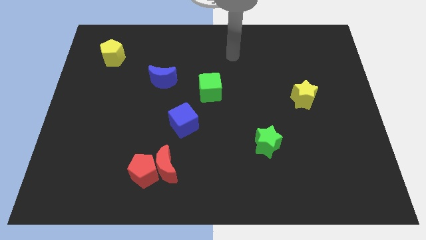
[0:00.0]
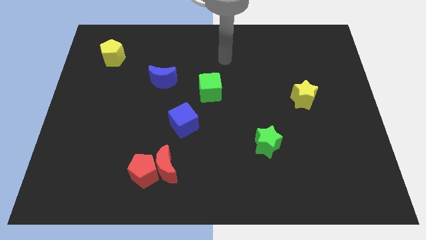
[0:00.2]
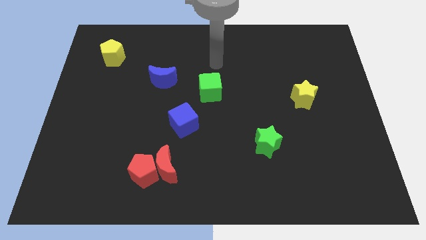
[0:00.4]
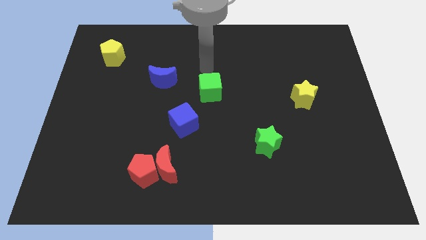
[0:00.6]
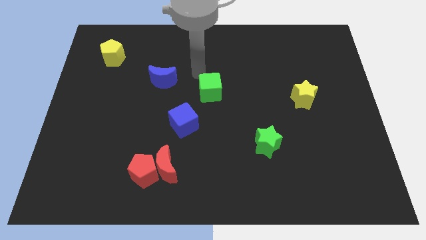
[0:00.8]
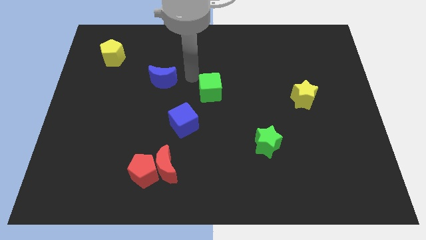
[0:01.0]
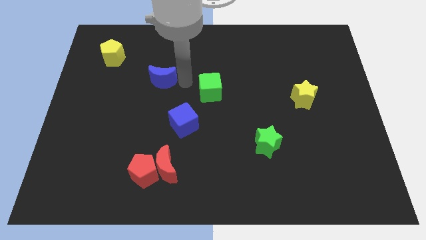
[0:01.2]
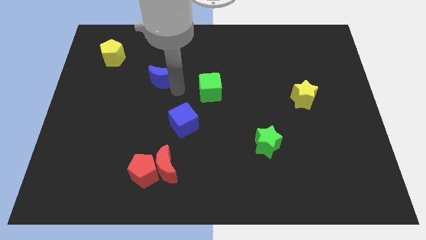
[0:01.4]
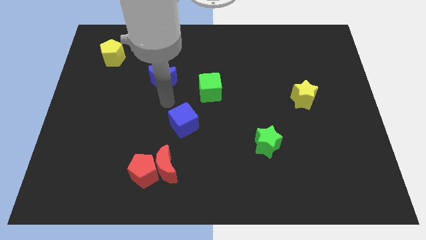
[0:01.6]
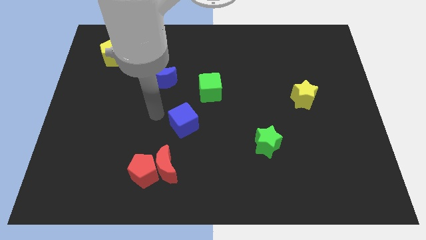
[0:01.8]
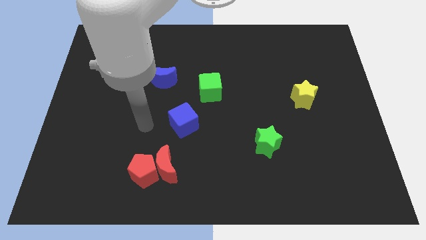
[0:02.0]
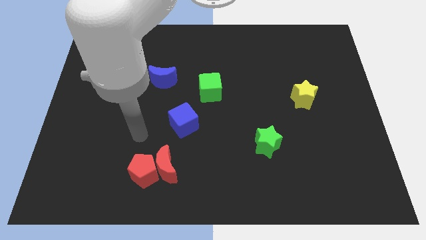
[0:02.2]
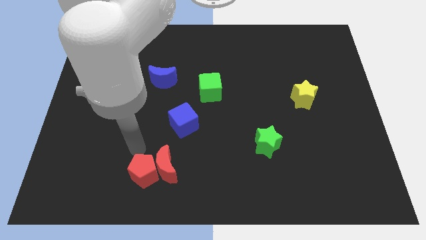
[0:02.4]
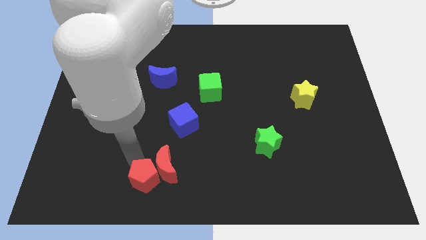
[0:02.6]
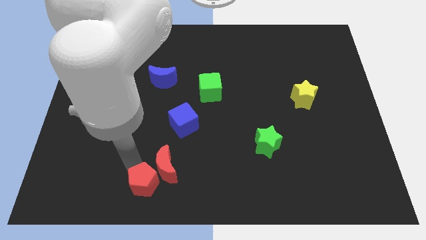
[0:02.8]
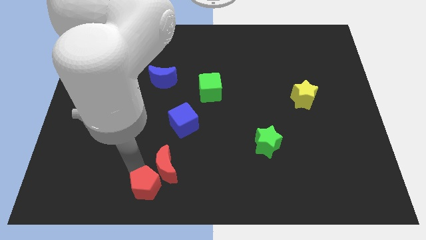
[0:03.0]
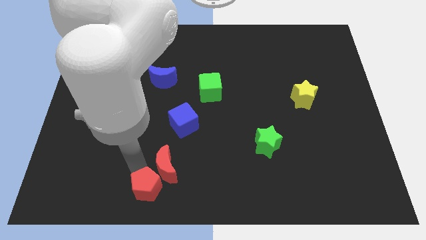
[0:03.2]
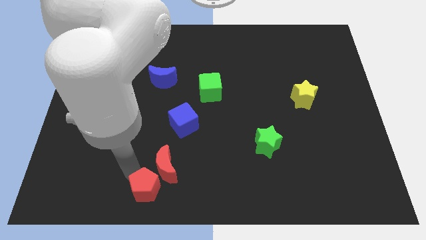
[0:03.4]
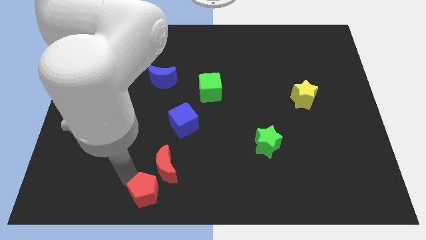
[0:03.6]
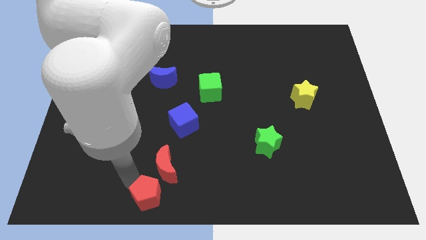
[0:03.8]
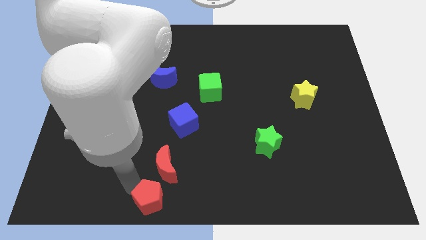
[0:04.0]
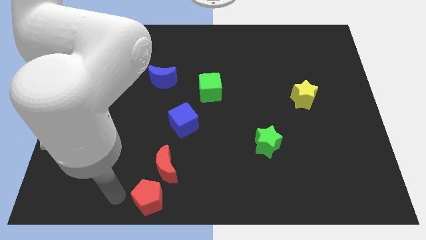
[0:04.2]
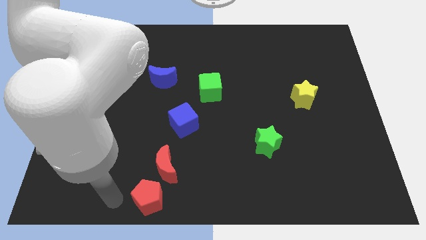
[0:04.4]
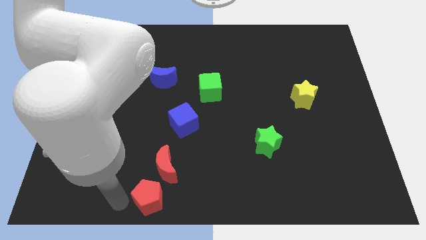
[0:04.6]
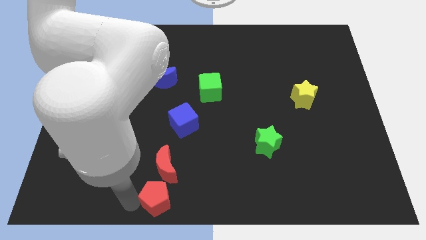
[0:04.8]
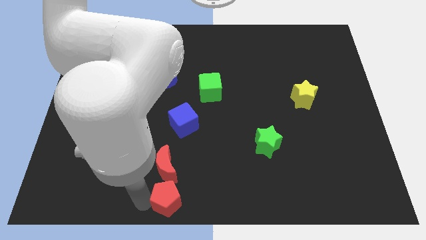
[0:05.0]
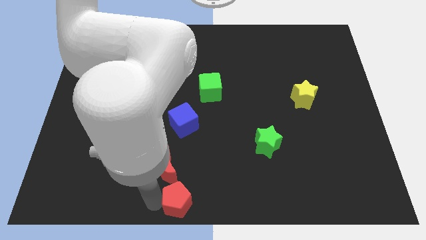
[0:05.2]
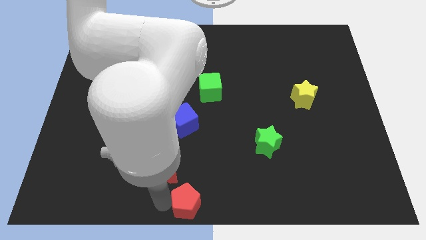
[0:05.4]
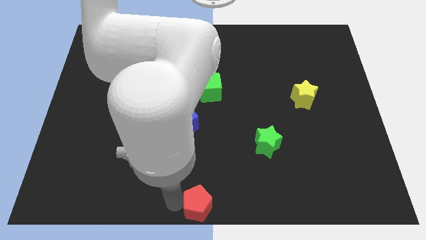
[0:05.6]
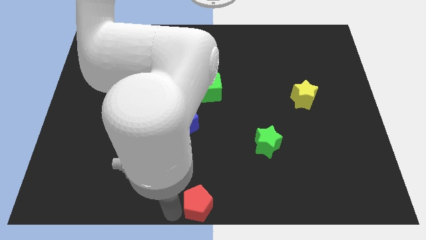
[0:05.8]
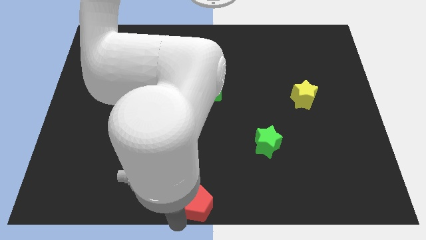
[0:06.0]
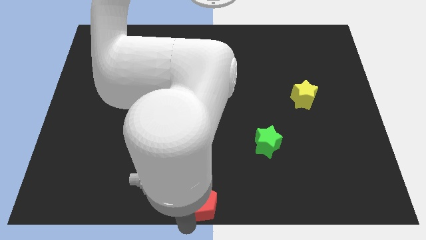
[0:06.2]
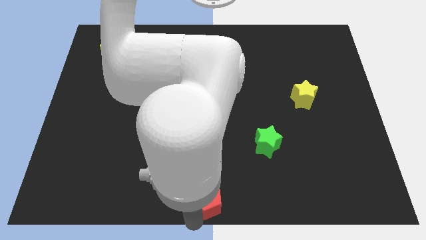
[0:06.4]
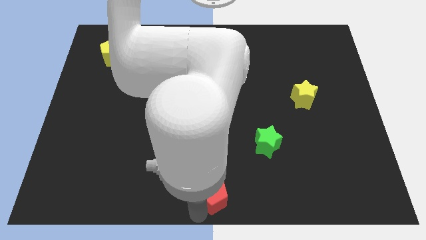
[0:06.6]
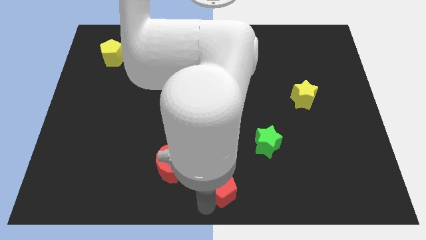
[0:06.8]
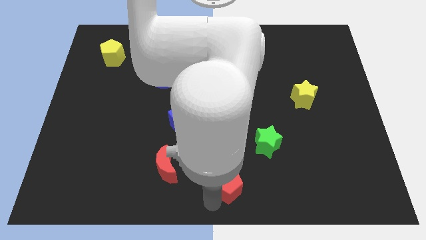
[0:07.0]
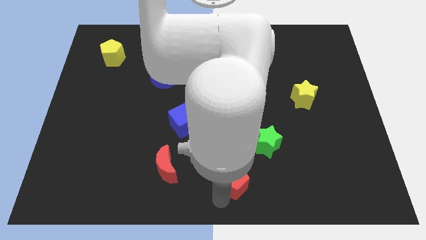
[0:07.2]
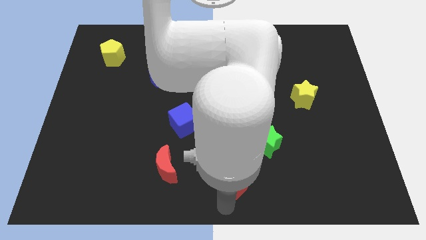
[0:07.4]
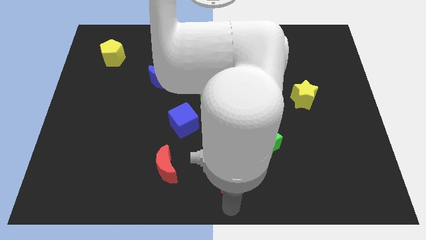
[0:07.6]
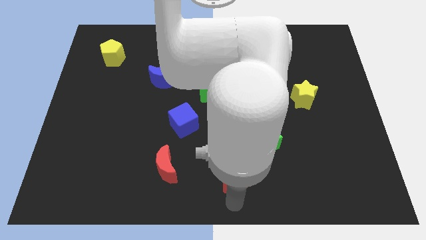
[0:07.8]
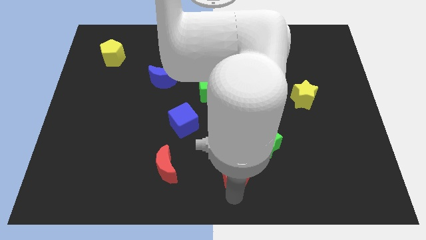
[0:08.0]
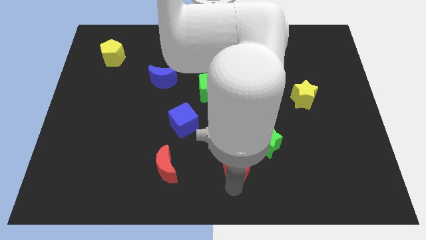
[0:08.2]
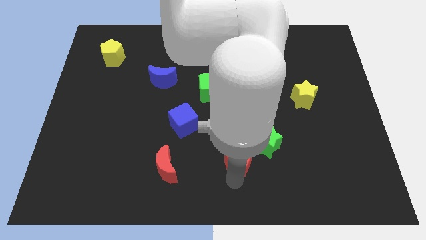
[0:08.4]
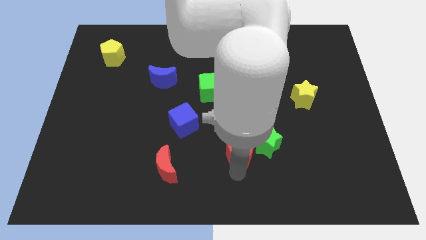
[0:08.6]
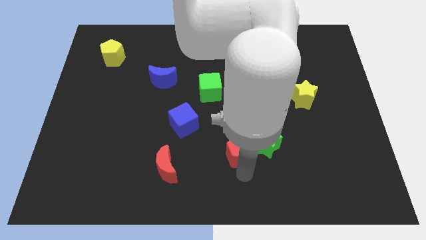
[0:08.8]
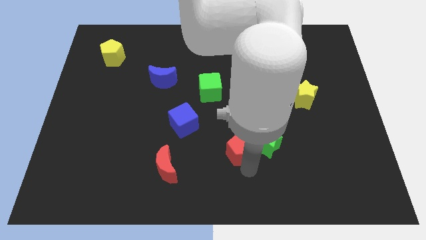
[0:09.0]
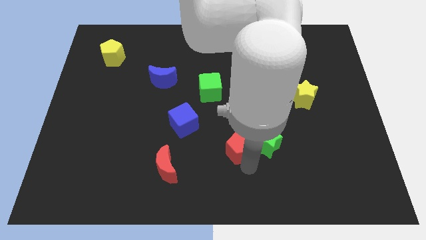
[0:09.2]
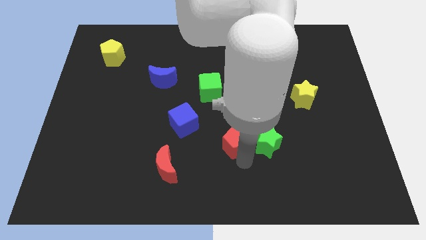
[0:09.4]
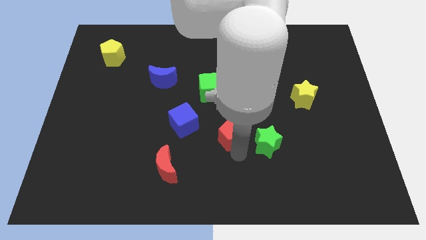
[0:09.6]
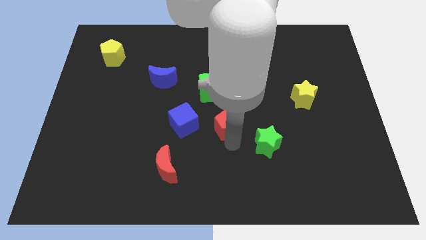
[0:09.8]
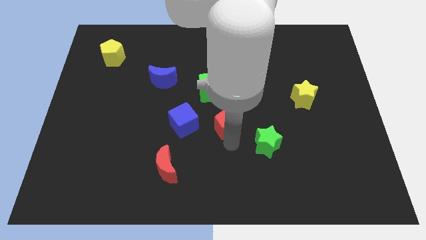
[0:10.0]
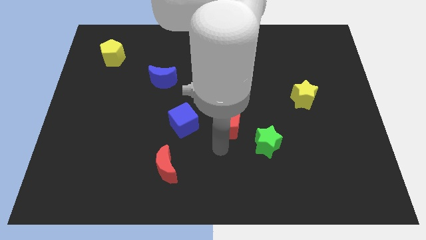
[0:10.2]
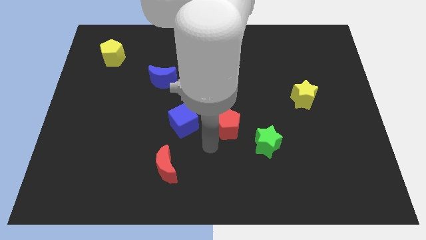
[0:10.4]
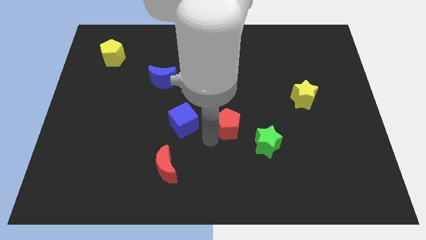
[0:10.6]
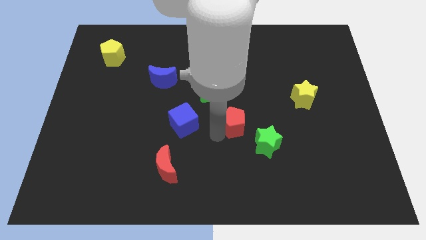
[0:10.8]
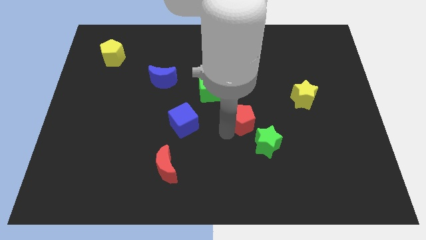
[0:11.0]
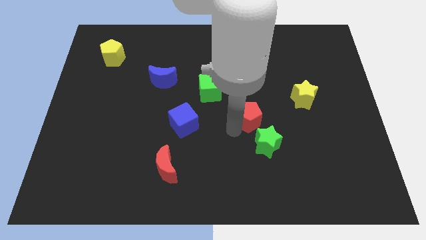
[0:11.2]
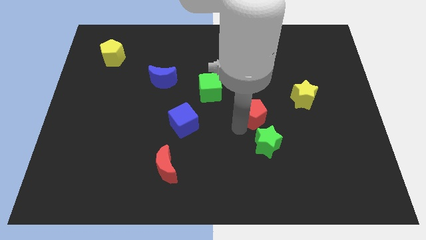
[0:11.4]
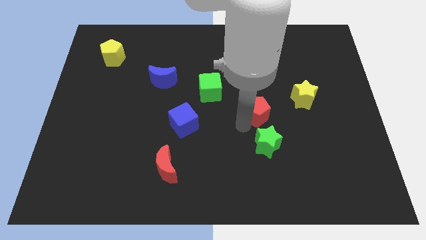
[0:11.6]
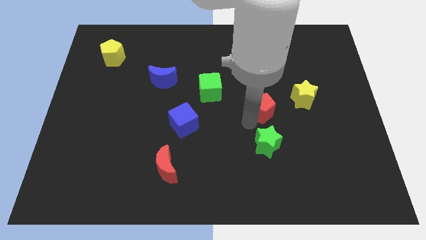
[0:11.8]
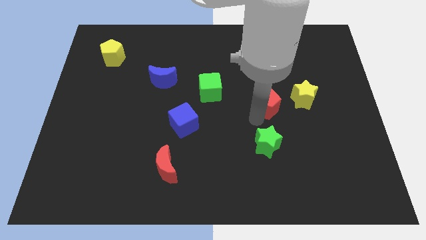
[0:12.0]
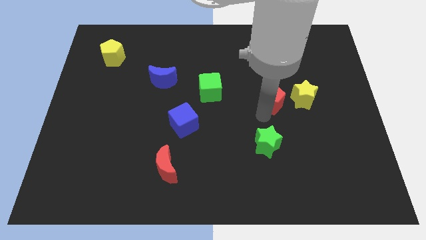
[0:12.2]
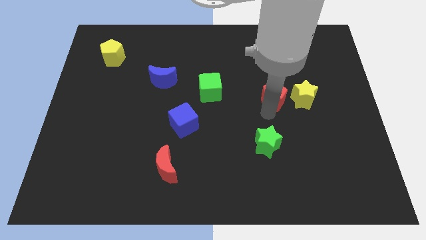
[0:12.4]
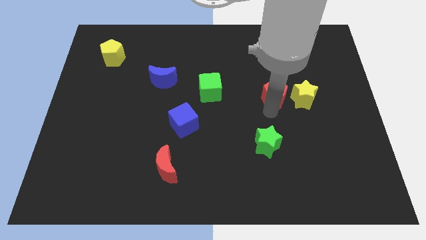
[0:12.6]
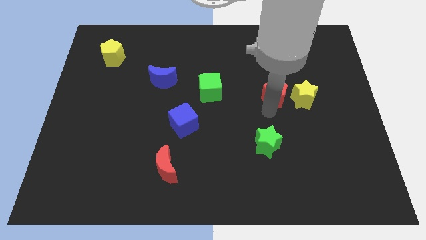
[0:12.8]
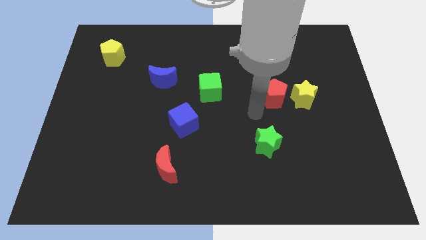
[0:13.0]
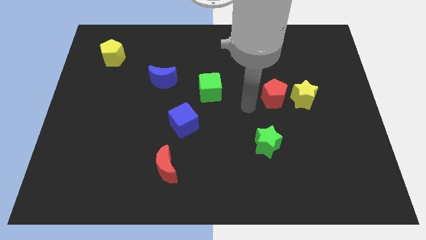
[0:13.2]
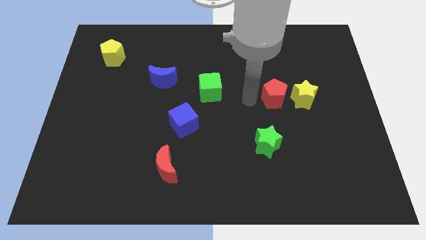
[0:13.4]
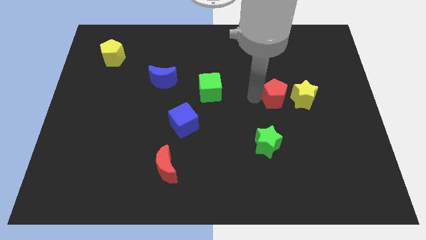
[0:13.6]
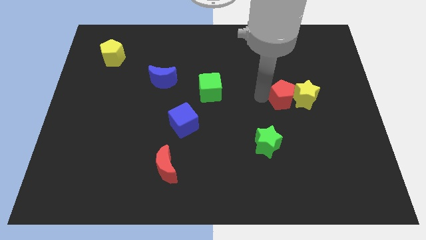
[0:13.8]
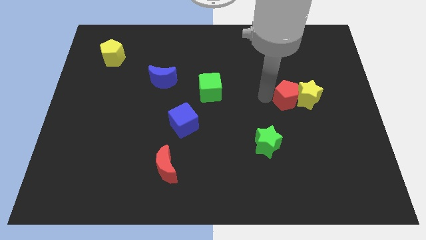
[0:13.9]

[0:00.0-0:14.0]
push the red pentagon towards the yellow star

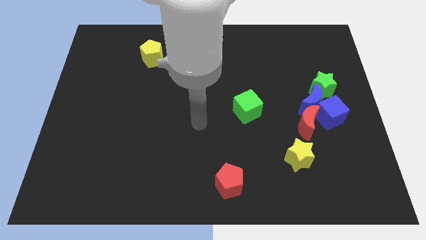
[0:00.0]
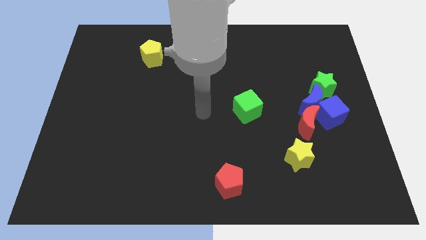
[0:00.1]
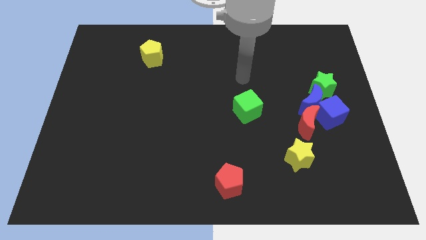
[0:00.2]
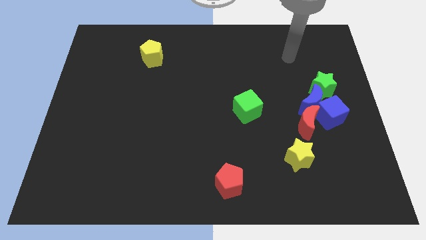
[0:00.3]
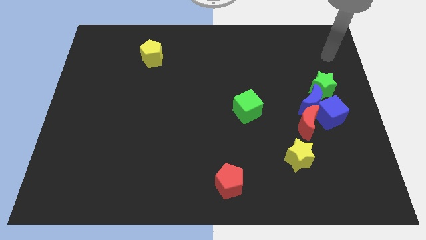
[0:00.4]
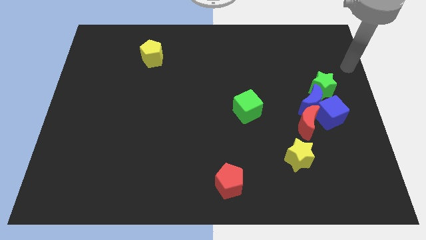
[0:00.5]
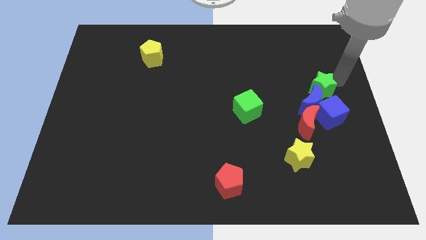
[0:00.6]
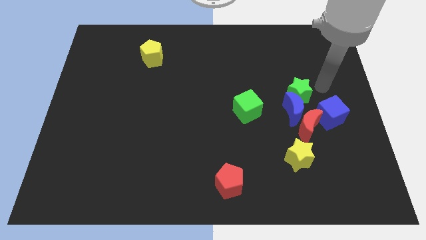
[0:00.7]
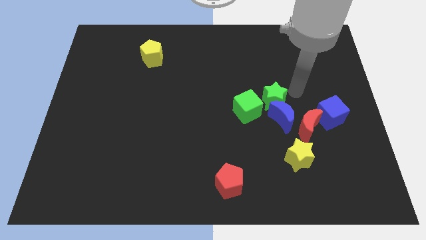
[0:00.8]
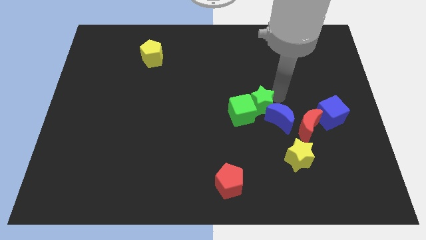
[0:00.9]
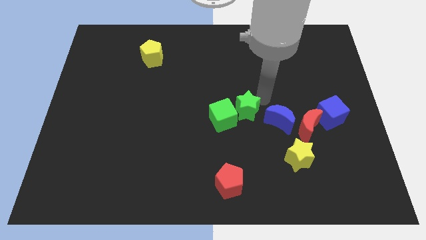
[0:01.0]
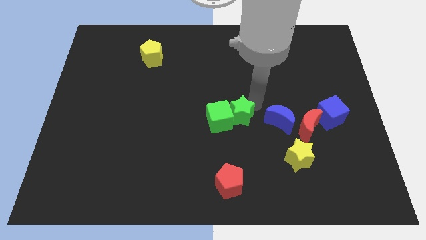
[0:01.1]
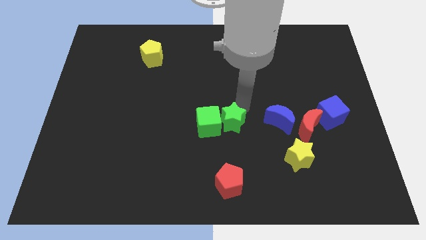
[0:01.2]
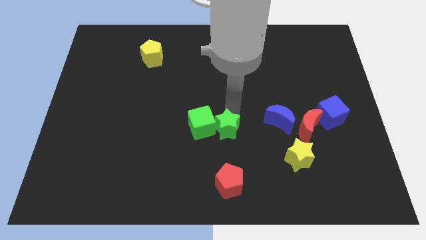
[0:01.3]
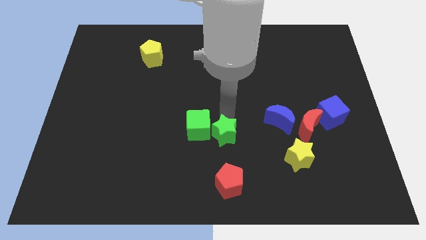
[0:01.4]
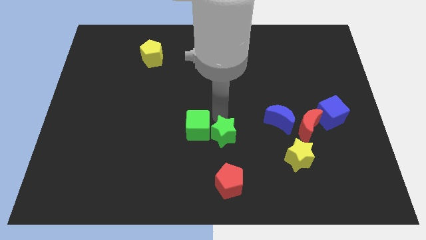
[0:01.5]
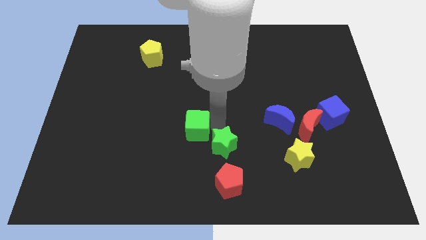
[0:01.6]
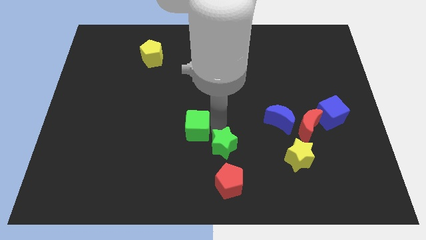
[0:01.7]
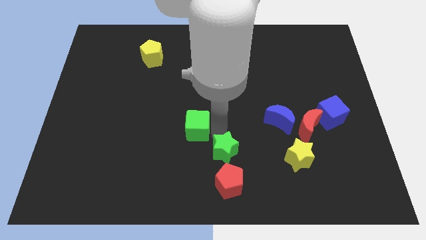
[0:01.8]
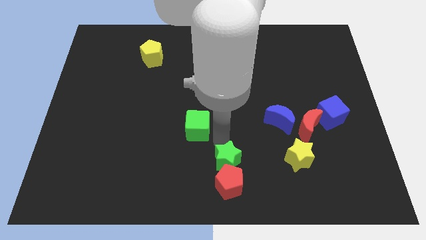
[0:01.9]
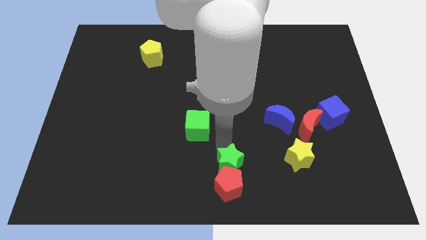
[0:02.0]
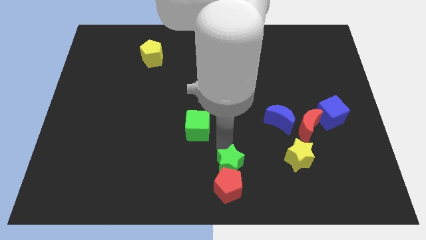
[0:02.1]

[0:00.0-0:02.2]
push the green star next to the red pentagon
